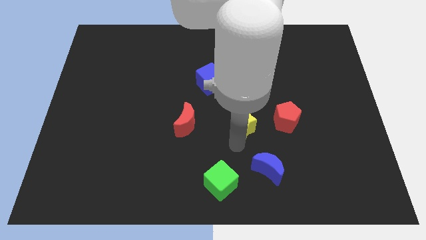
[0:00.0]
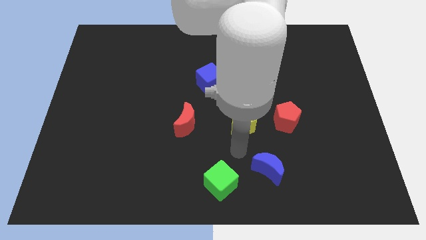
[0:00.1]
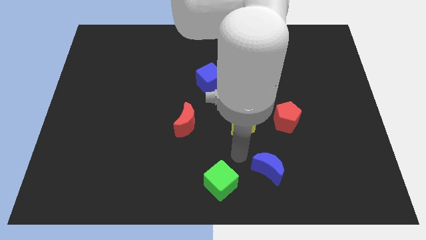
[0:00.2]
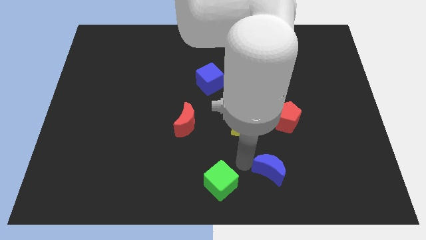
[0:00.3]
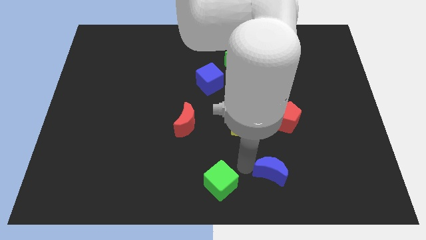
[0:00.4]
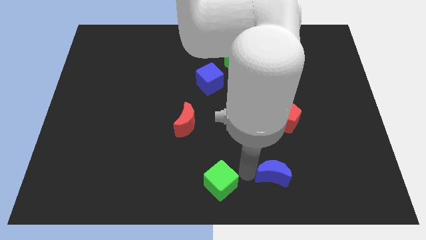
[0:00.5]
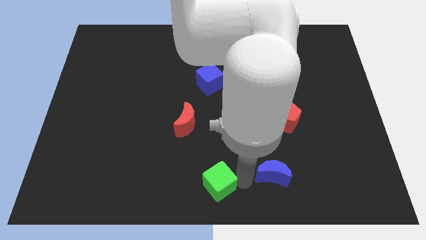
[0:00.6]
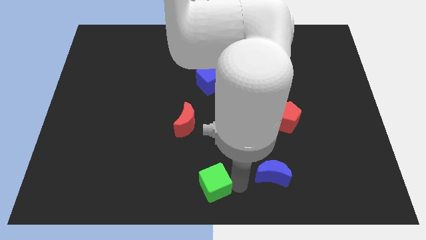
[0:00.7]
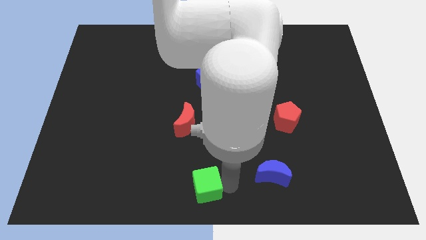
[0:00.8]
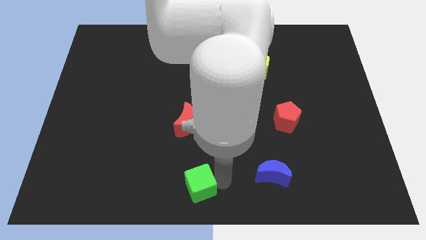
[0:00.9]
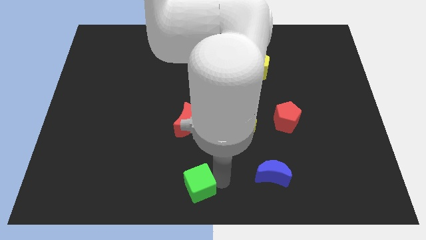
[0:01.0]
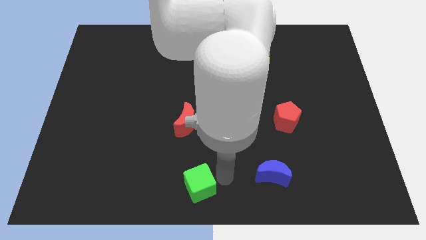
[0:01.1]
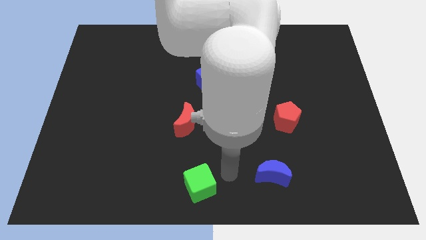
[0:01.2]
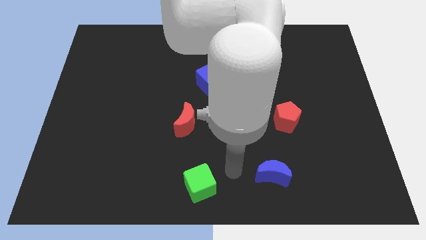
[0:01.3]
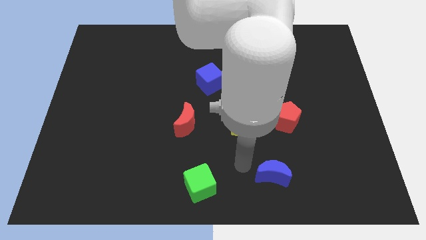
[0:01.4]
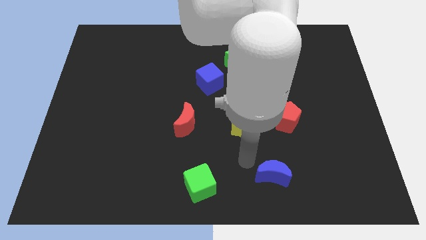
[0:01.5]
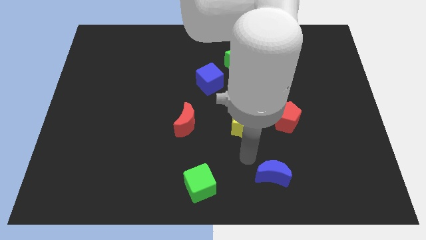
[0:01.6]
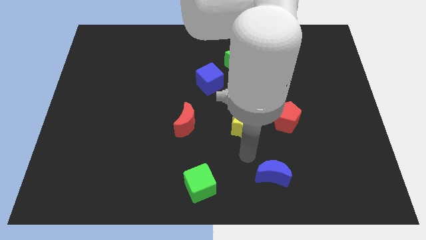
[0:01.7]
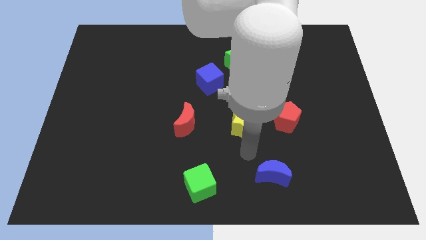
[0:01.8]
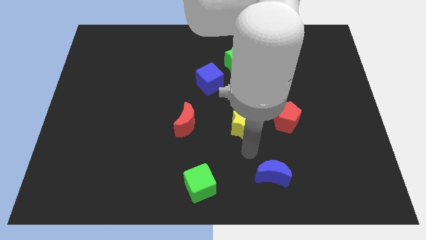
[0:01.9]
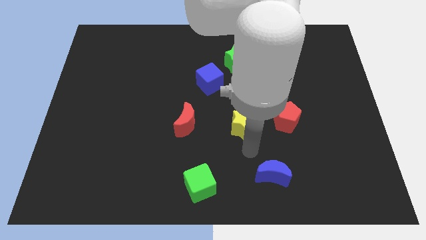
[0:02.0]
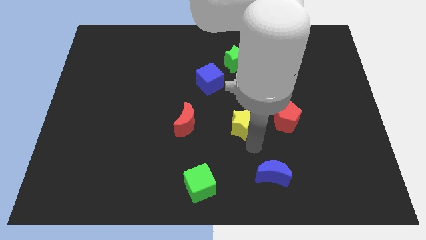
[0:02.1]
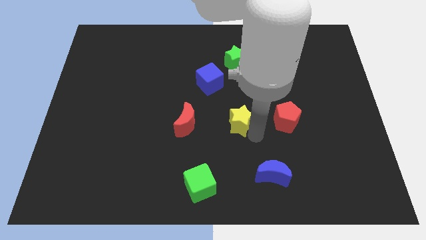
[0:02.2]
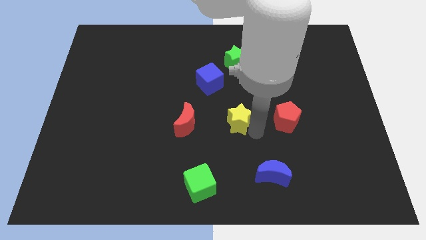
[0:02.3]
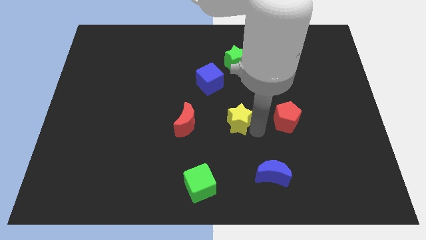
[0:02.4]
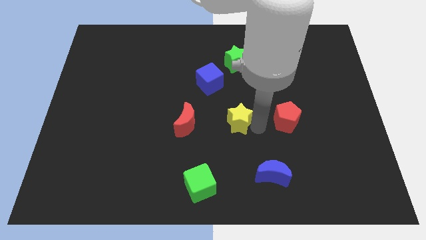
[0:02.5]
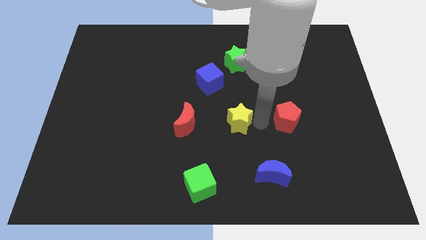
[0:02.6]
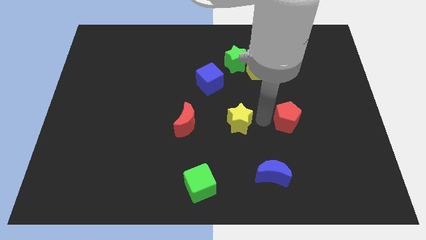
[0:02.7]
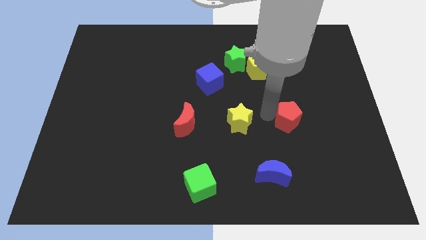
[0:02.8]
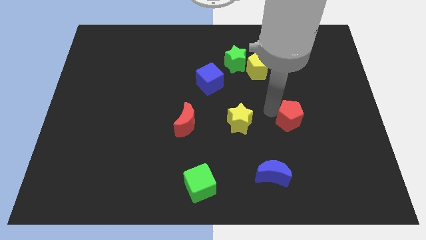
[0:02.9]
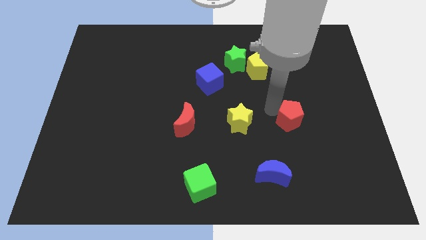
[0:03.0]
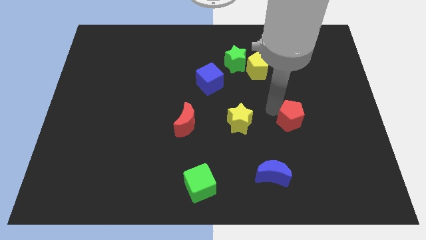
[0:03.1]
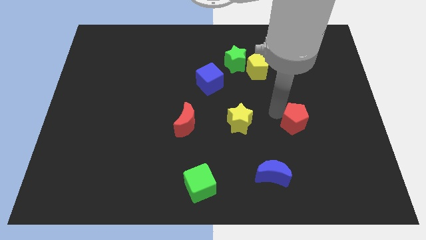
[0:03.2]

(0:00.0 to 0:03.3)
make a triangle out of yellow star green cube and the blue moon

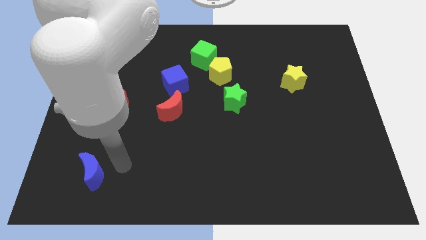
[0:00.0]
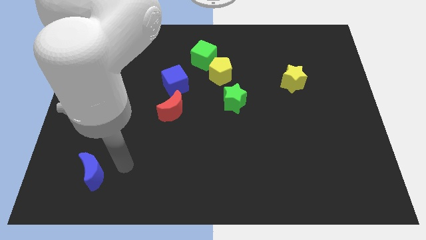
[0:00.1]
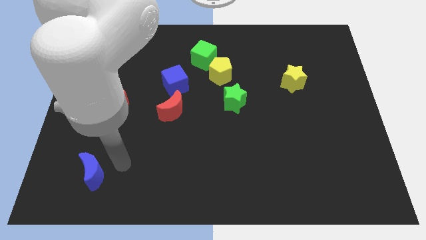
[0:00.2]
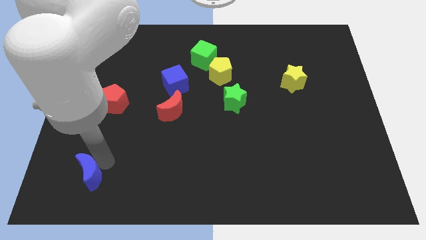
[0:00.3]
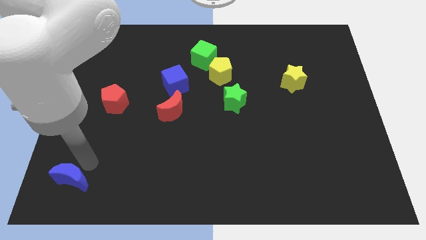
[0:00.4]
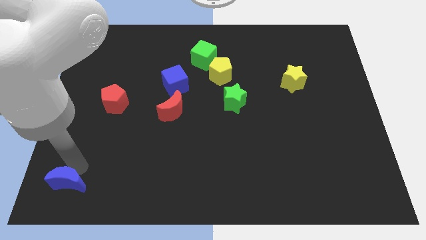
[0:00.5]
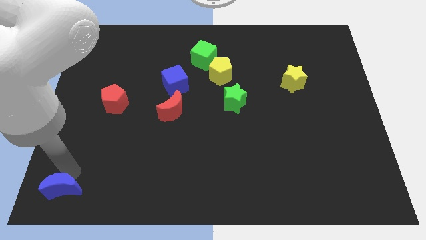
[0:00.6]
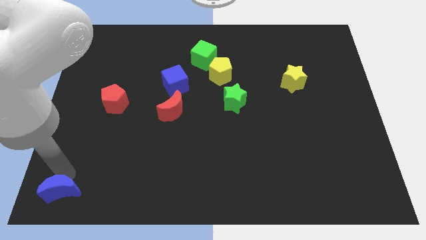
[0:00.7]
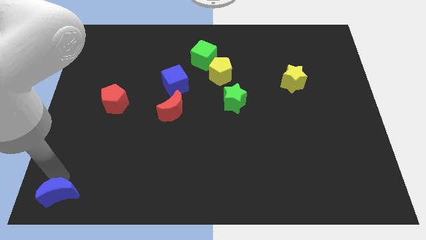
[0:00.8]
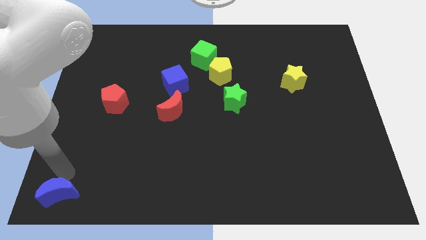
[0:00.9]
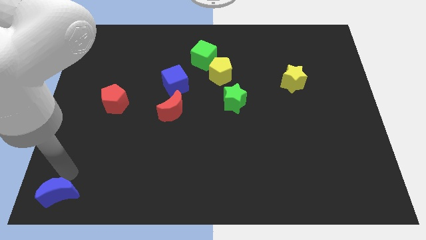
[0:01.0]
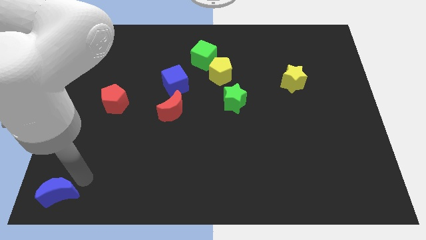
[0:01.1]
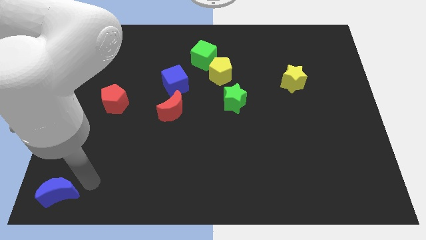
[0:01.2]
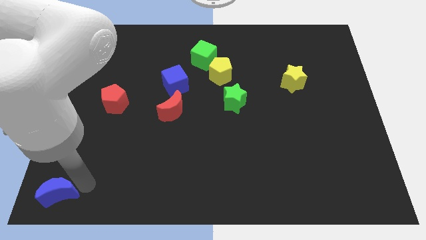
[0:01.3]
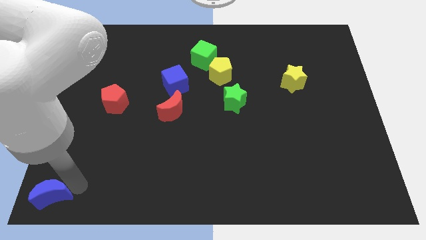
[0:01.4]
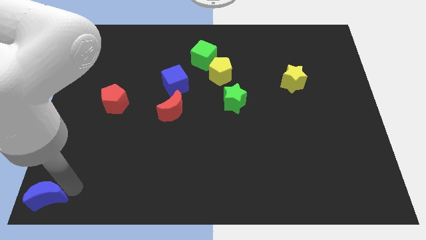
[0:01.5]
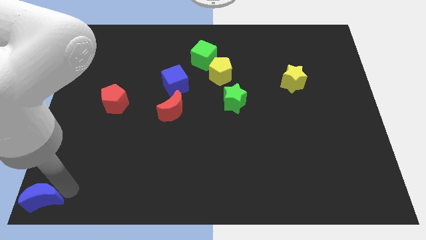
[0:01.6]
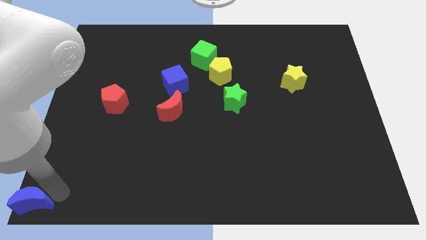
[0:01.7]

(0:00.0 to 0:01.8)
move the blue crescent to the bottom left of the board

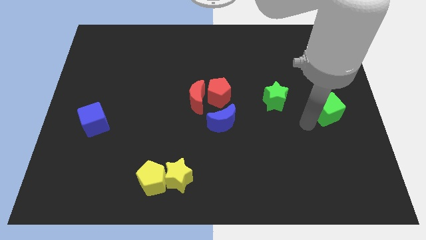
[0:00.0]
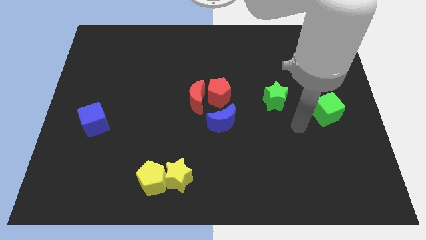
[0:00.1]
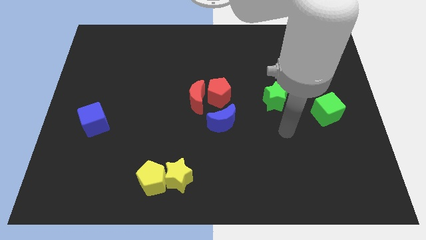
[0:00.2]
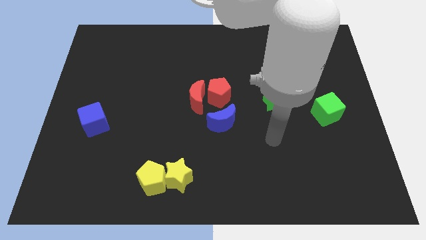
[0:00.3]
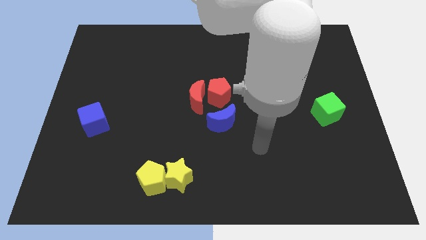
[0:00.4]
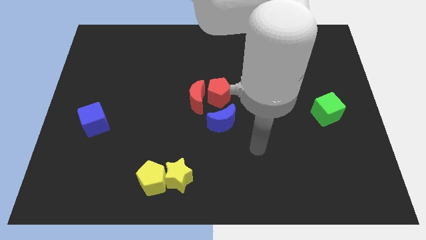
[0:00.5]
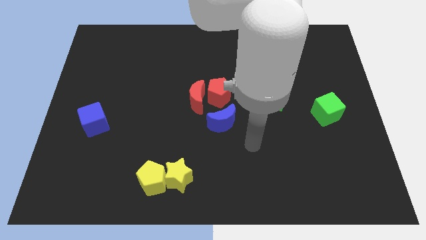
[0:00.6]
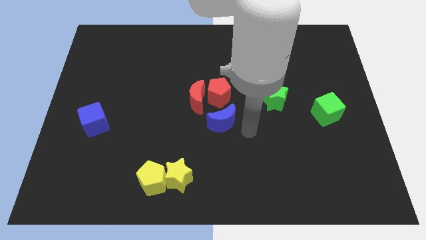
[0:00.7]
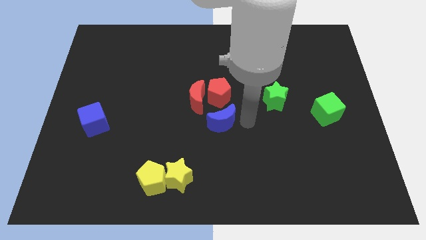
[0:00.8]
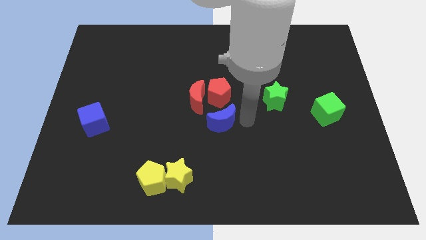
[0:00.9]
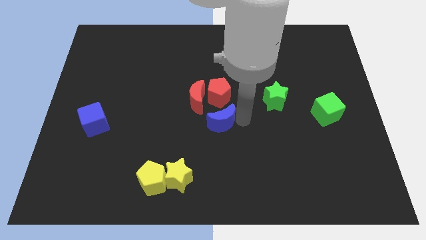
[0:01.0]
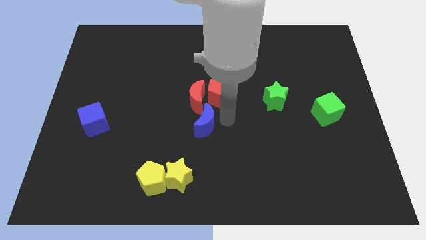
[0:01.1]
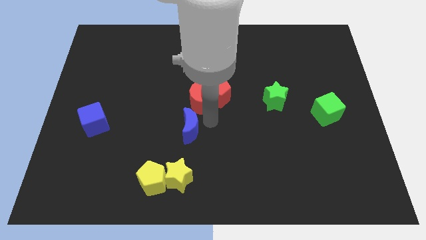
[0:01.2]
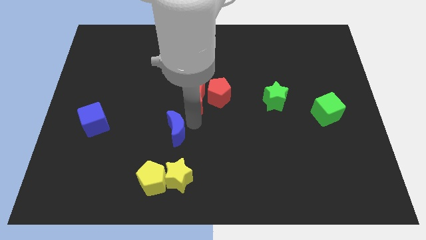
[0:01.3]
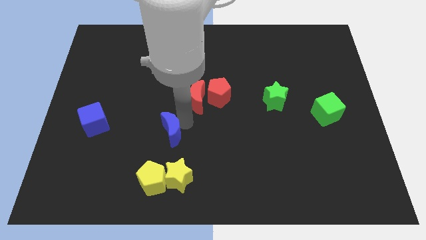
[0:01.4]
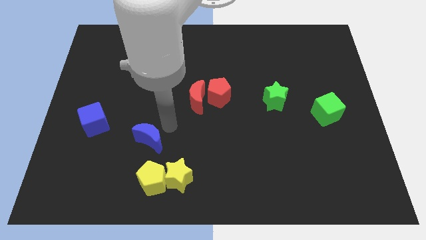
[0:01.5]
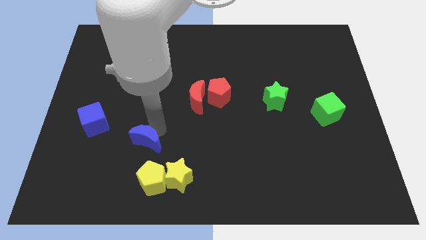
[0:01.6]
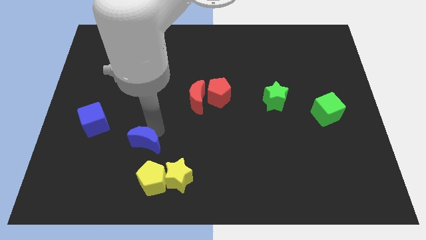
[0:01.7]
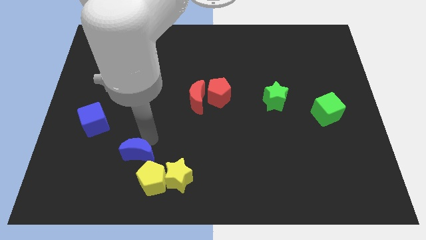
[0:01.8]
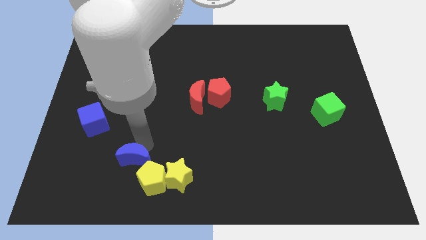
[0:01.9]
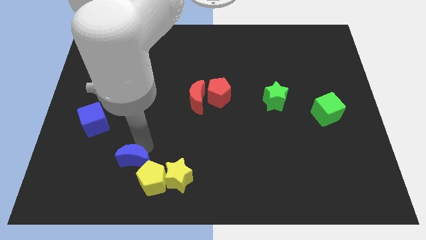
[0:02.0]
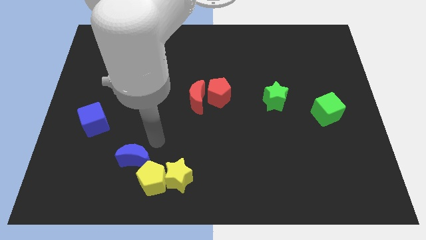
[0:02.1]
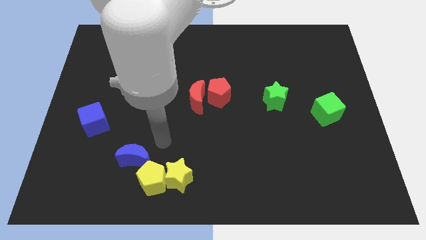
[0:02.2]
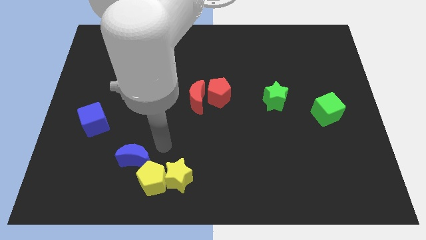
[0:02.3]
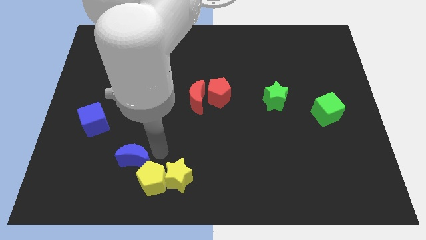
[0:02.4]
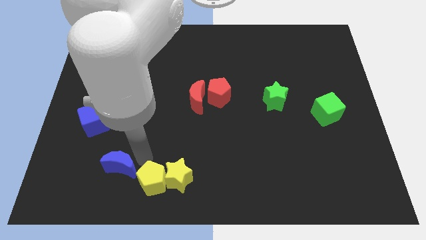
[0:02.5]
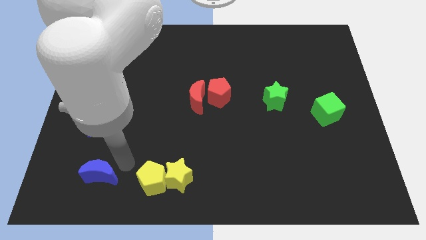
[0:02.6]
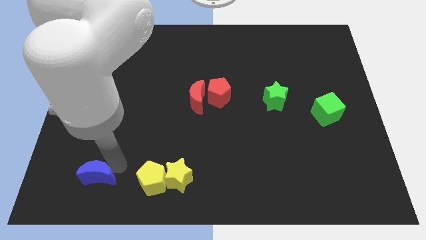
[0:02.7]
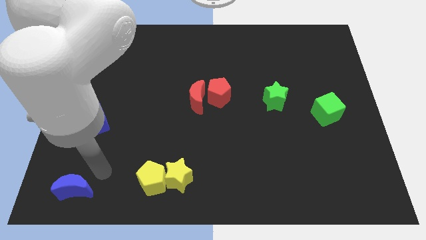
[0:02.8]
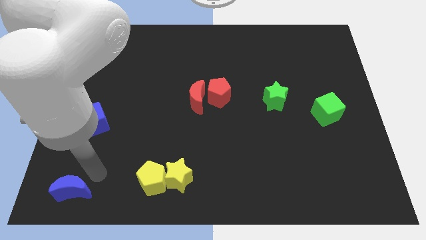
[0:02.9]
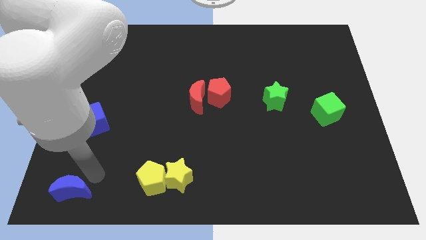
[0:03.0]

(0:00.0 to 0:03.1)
move blue crescent left of yellow pentagon

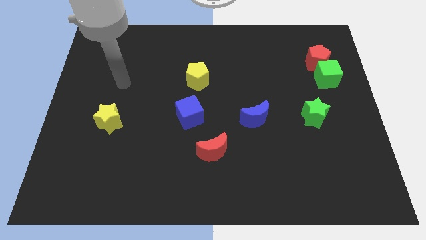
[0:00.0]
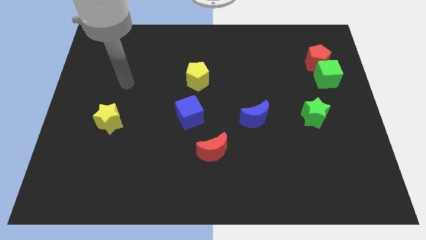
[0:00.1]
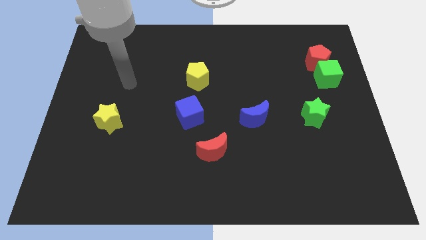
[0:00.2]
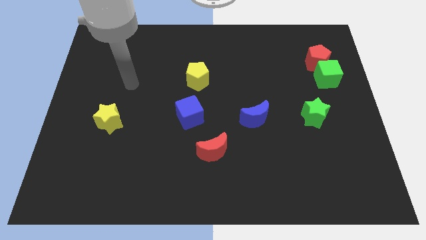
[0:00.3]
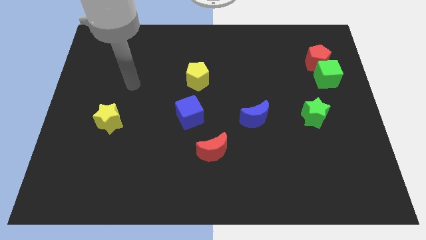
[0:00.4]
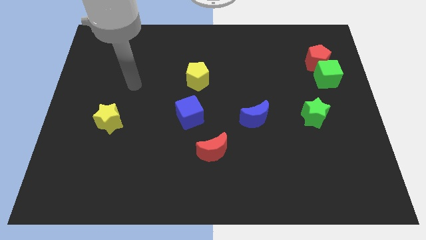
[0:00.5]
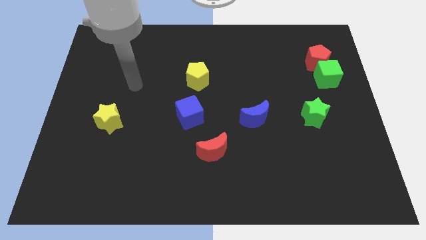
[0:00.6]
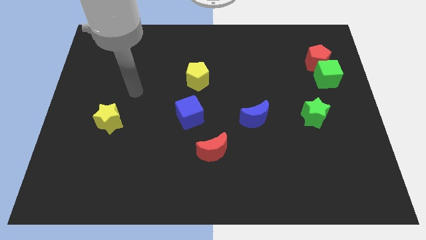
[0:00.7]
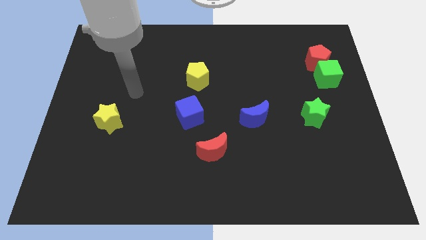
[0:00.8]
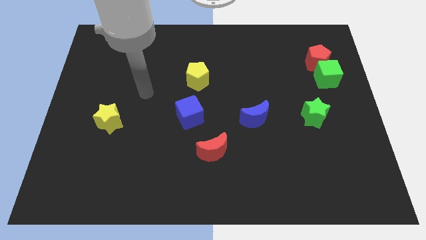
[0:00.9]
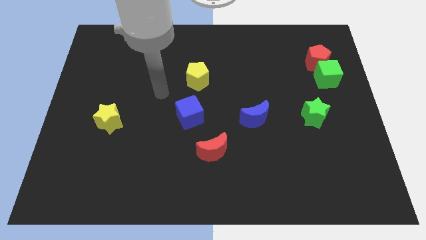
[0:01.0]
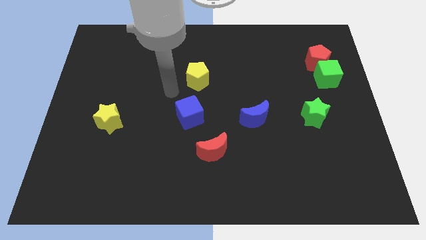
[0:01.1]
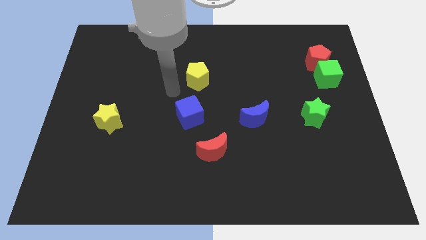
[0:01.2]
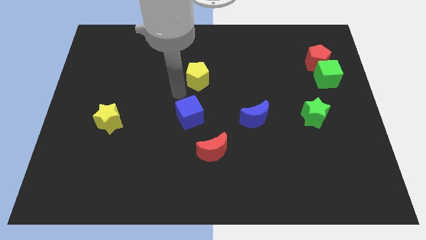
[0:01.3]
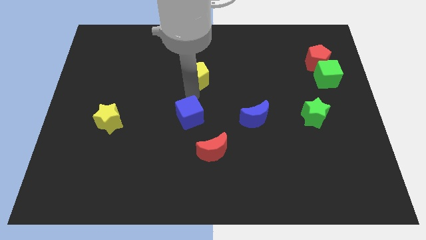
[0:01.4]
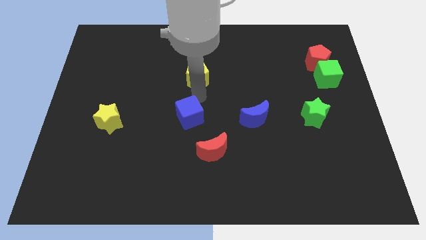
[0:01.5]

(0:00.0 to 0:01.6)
place your arm in between the blue cube and the yellow pentagon
